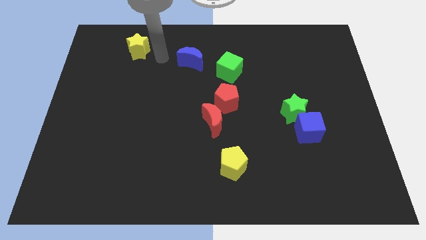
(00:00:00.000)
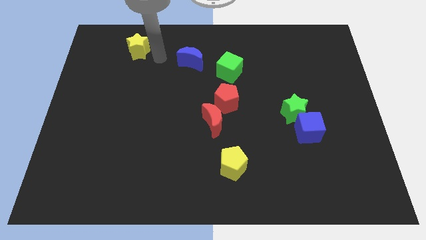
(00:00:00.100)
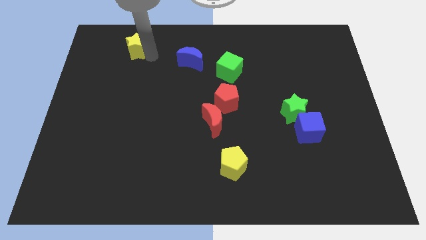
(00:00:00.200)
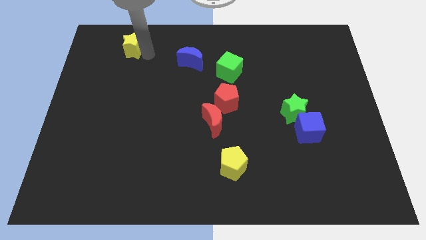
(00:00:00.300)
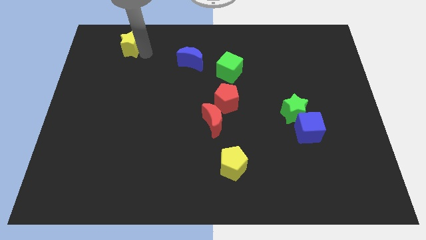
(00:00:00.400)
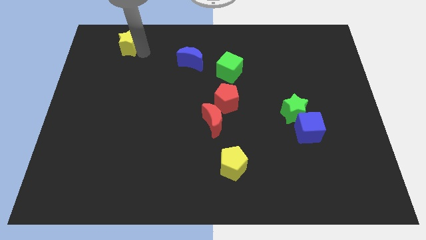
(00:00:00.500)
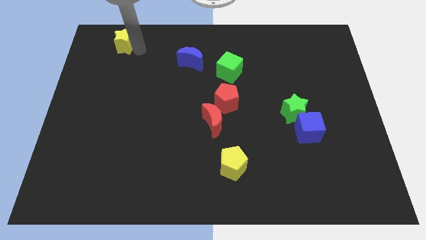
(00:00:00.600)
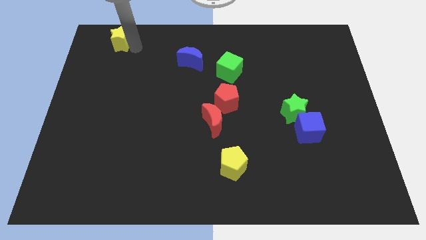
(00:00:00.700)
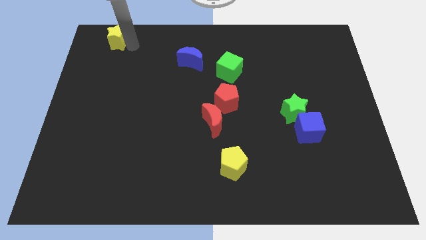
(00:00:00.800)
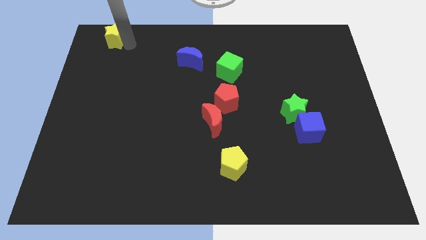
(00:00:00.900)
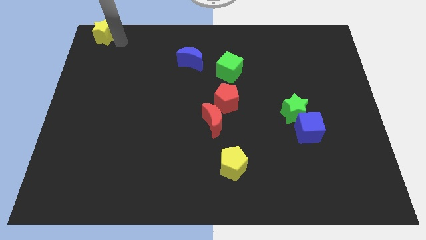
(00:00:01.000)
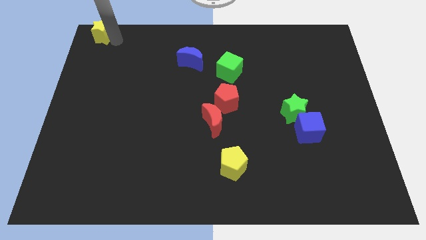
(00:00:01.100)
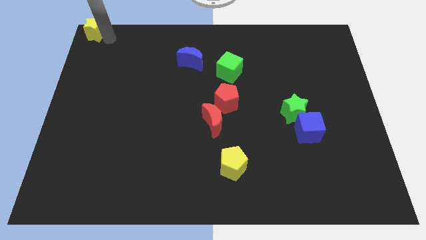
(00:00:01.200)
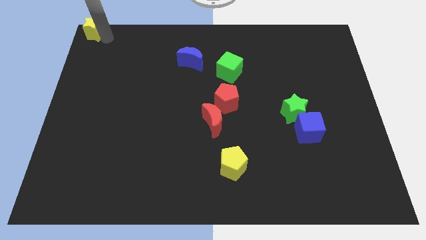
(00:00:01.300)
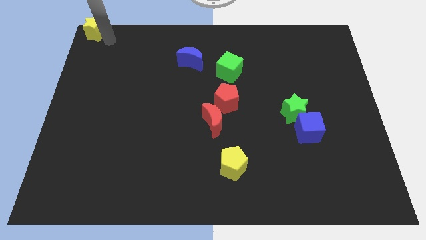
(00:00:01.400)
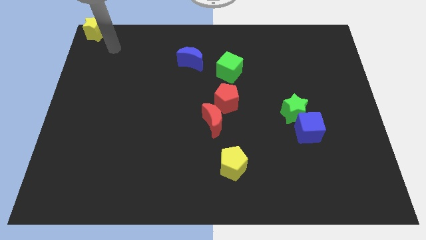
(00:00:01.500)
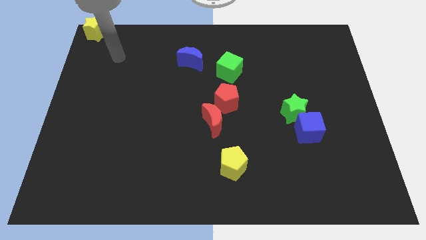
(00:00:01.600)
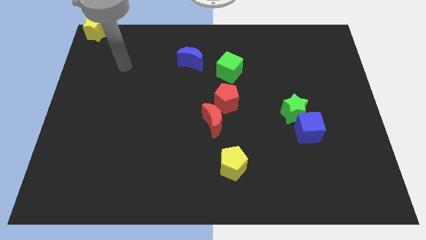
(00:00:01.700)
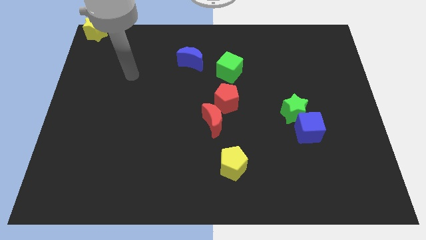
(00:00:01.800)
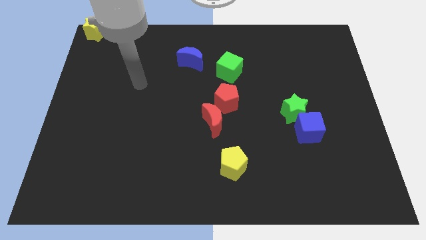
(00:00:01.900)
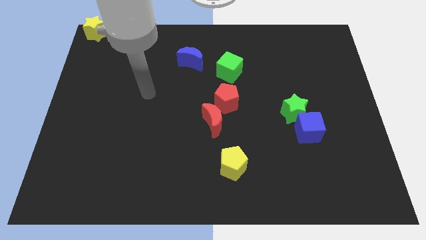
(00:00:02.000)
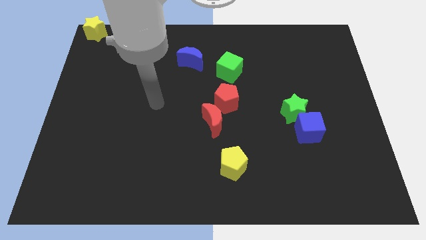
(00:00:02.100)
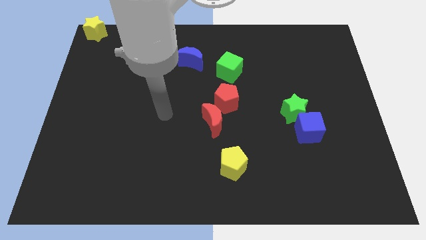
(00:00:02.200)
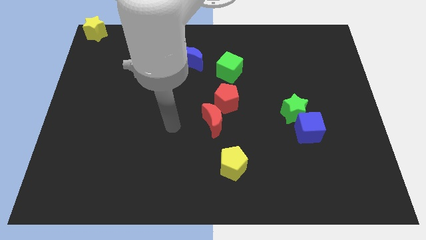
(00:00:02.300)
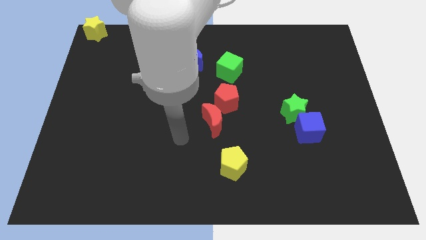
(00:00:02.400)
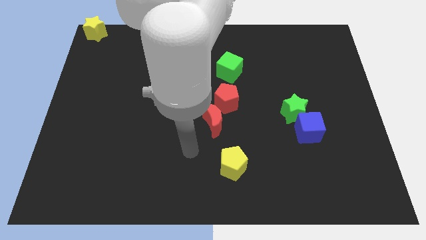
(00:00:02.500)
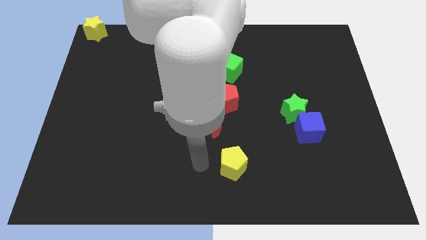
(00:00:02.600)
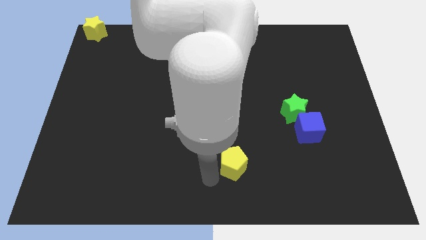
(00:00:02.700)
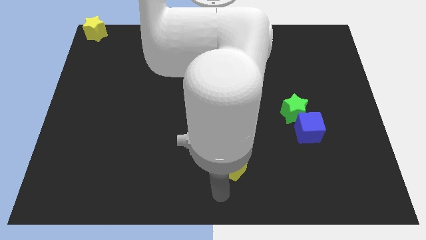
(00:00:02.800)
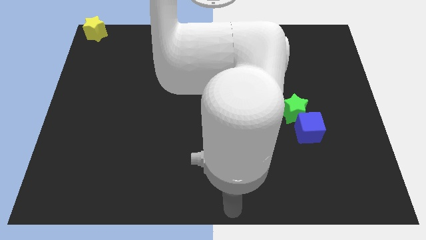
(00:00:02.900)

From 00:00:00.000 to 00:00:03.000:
place the yellow star top left corner

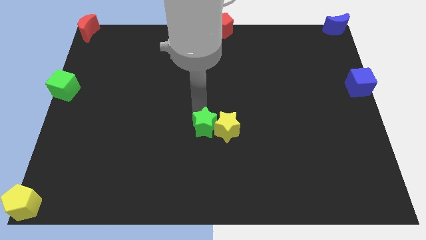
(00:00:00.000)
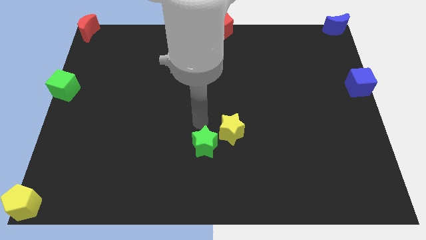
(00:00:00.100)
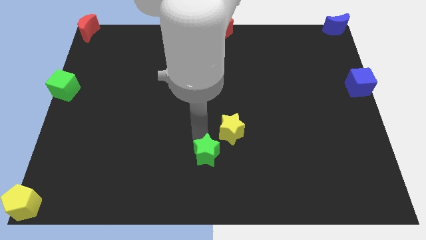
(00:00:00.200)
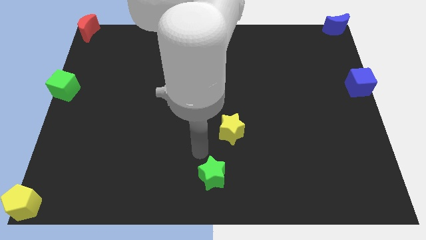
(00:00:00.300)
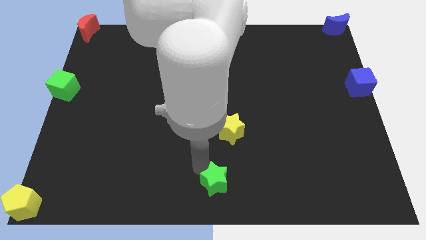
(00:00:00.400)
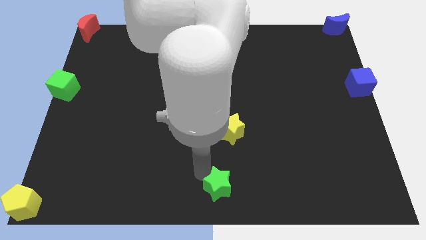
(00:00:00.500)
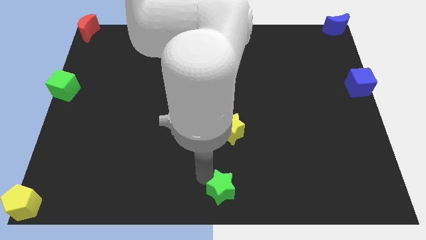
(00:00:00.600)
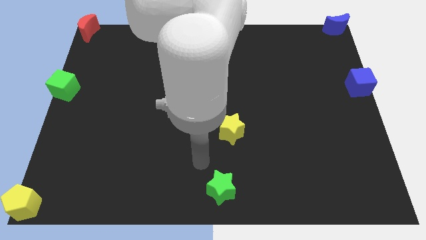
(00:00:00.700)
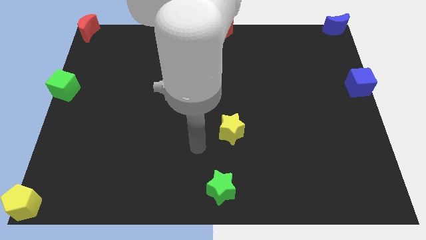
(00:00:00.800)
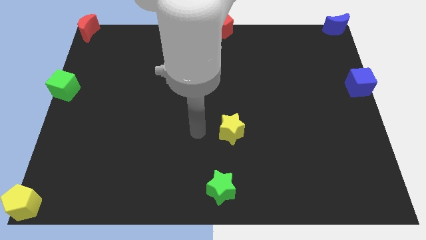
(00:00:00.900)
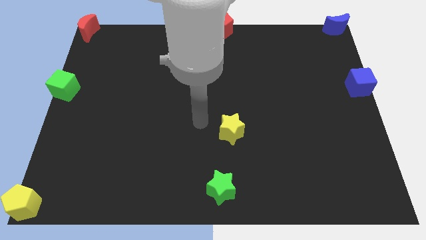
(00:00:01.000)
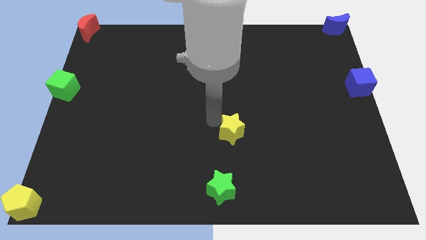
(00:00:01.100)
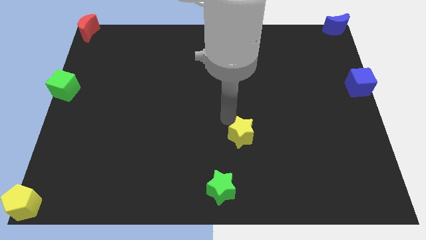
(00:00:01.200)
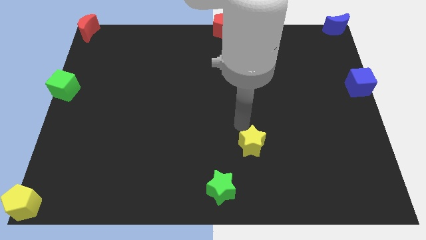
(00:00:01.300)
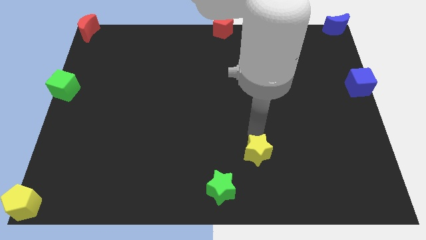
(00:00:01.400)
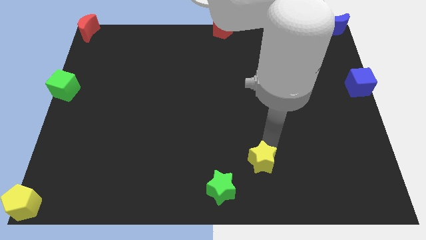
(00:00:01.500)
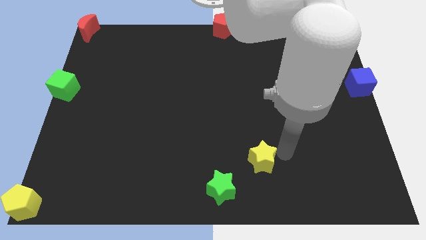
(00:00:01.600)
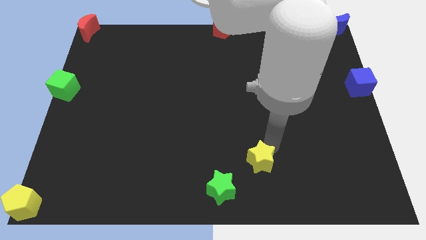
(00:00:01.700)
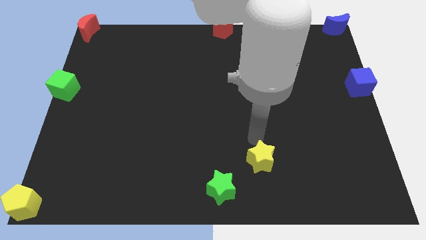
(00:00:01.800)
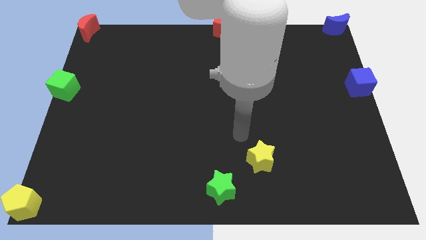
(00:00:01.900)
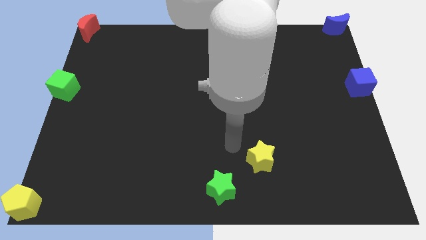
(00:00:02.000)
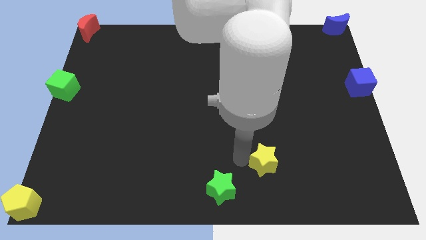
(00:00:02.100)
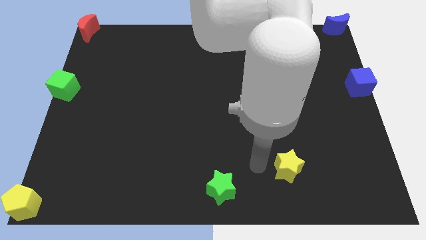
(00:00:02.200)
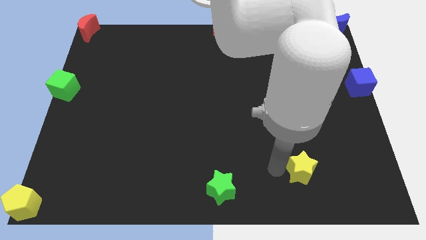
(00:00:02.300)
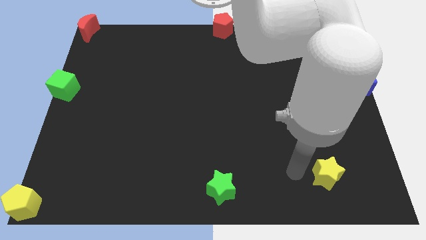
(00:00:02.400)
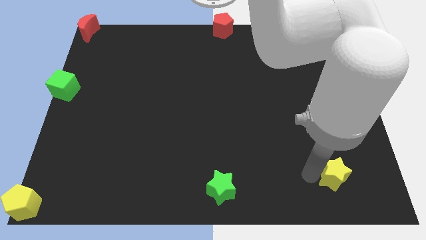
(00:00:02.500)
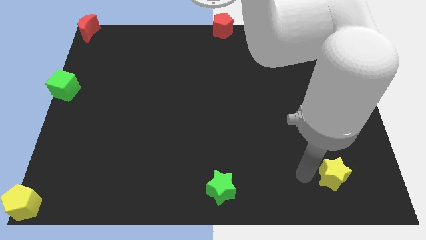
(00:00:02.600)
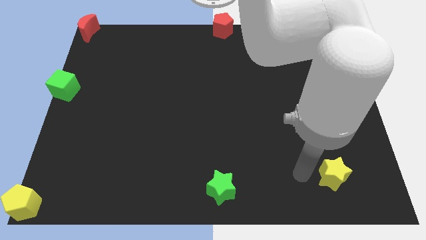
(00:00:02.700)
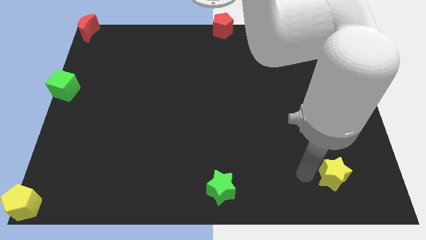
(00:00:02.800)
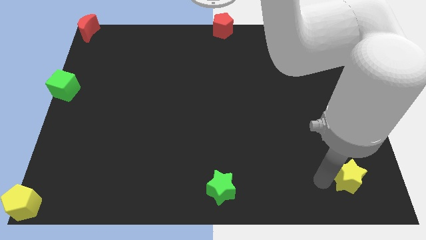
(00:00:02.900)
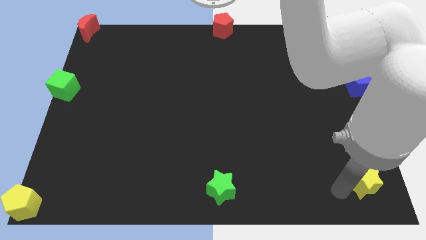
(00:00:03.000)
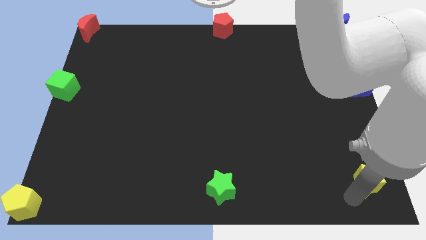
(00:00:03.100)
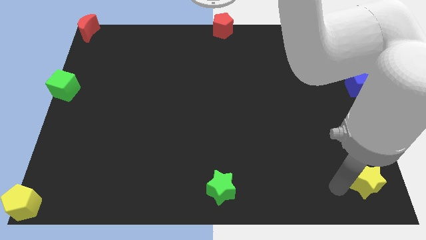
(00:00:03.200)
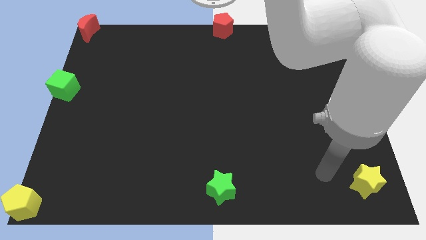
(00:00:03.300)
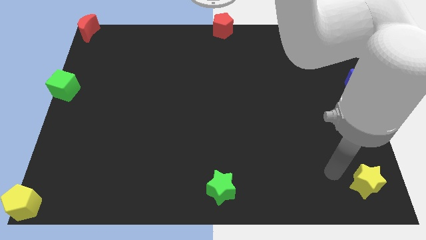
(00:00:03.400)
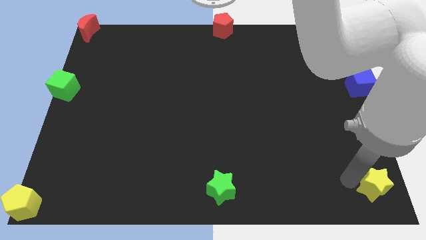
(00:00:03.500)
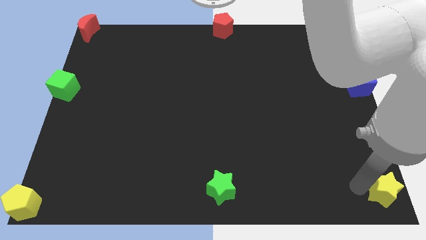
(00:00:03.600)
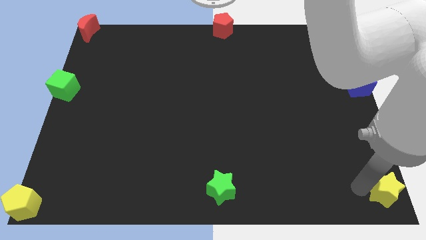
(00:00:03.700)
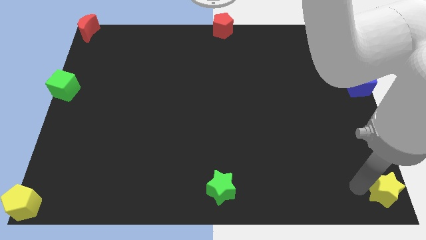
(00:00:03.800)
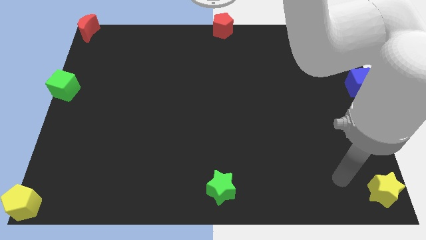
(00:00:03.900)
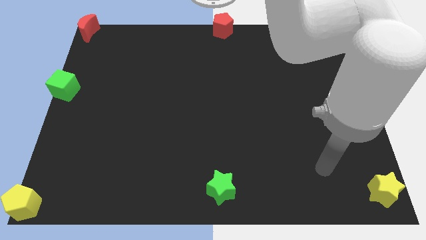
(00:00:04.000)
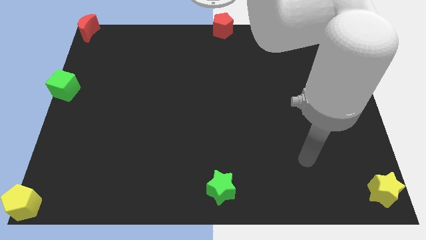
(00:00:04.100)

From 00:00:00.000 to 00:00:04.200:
move the yellow star to the bottom right of the board

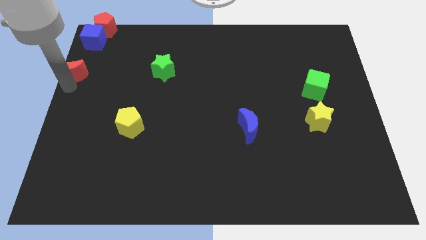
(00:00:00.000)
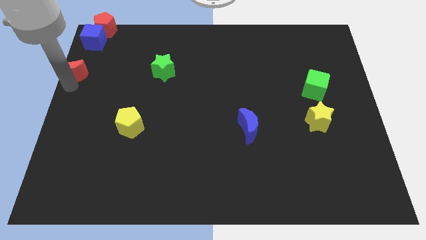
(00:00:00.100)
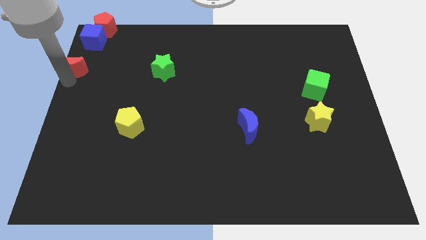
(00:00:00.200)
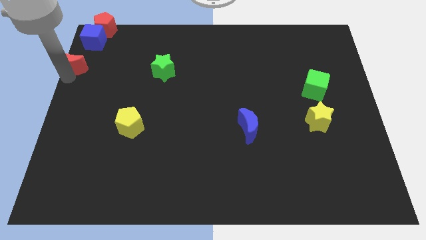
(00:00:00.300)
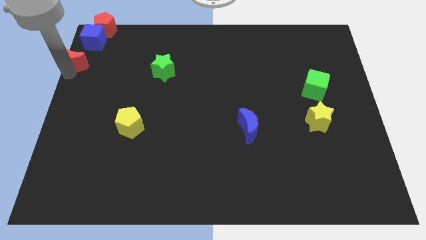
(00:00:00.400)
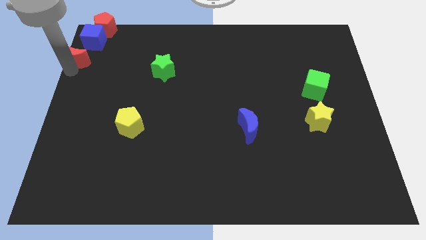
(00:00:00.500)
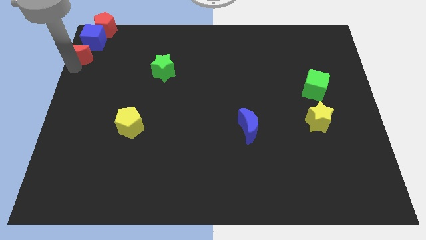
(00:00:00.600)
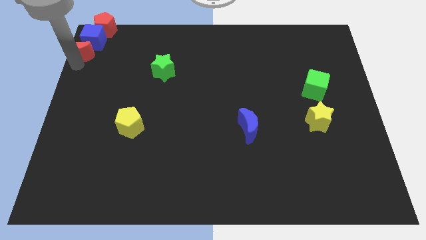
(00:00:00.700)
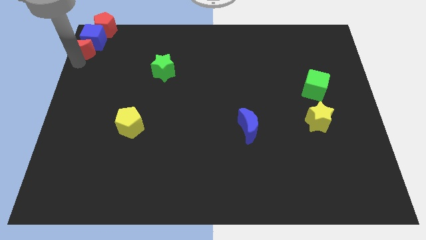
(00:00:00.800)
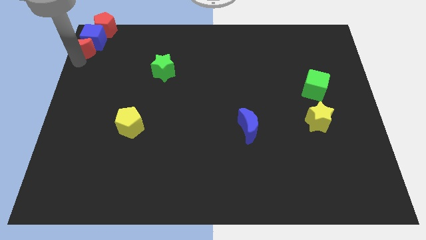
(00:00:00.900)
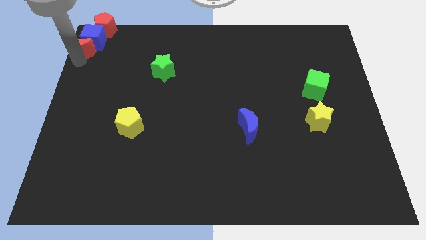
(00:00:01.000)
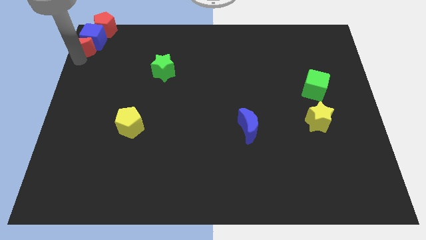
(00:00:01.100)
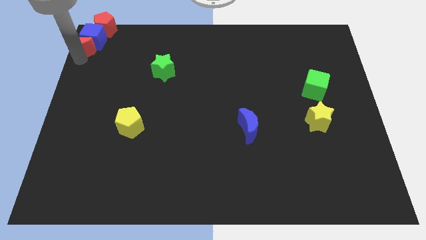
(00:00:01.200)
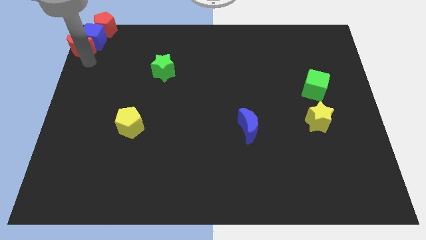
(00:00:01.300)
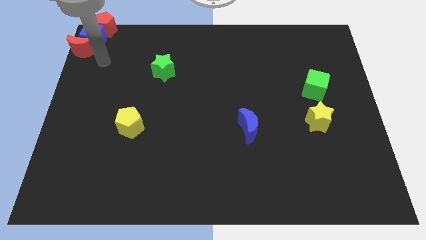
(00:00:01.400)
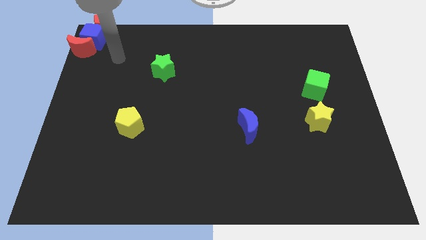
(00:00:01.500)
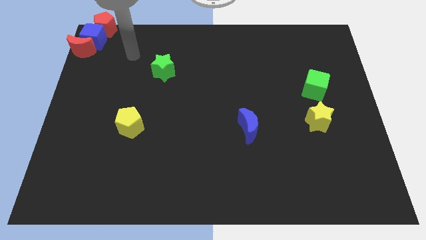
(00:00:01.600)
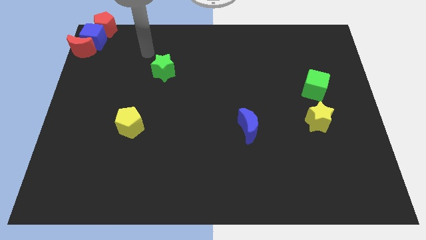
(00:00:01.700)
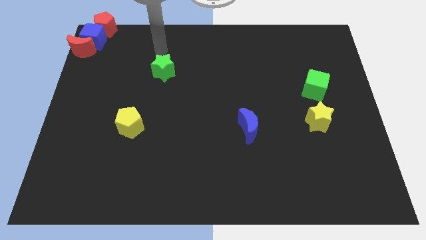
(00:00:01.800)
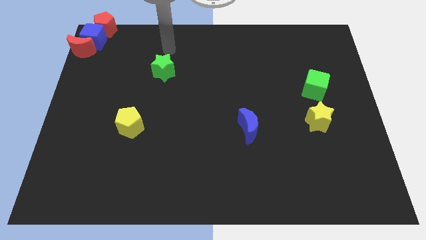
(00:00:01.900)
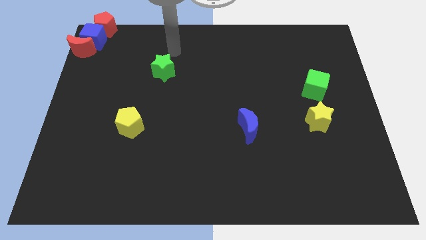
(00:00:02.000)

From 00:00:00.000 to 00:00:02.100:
push the red moon close to the blue cube
